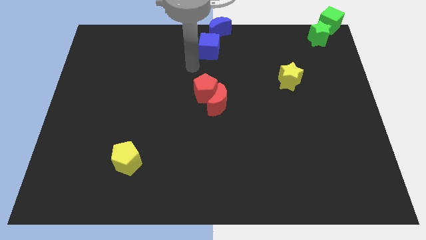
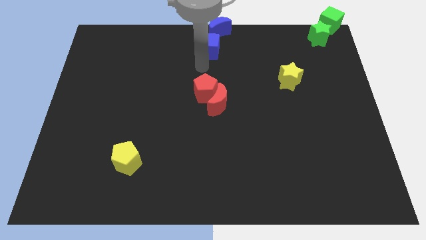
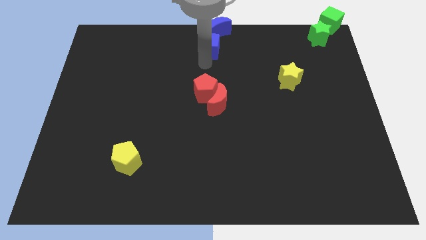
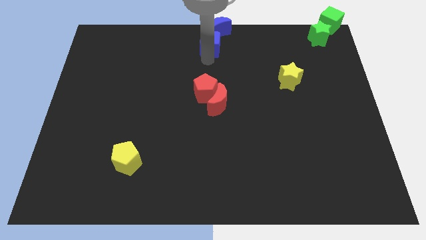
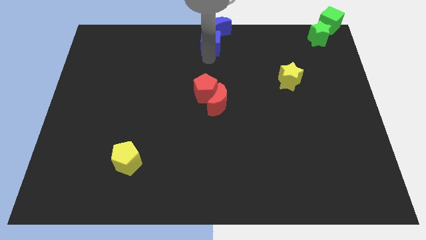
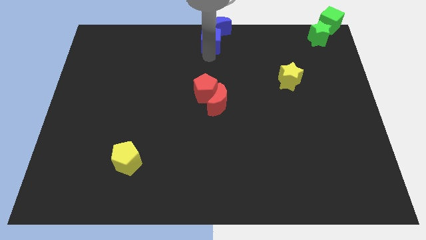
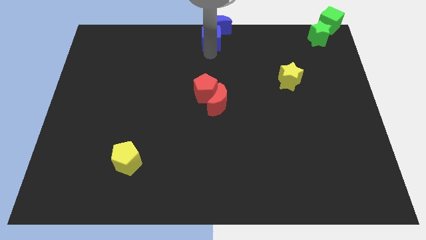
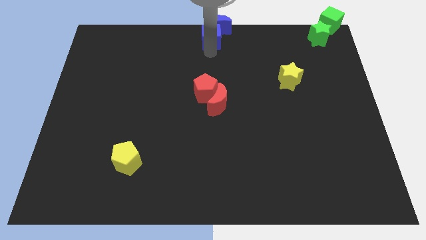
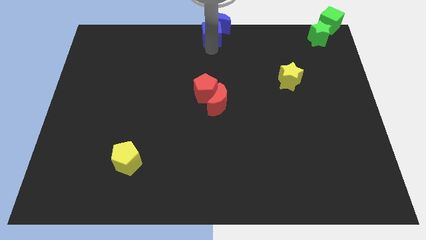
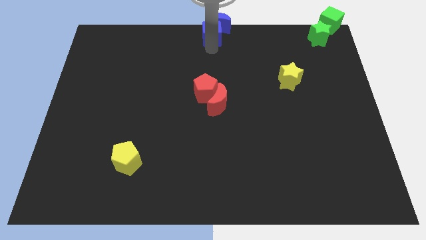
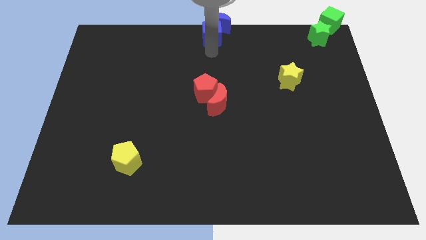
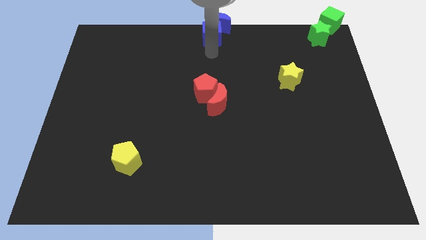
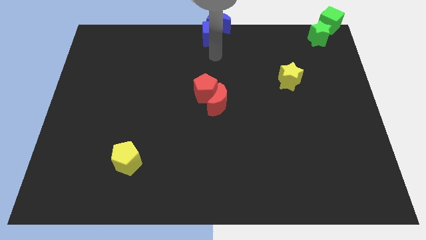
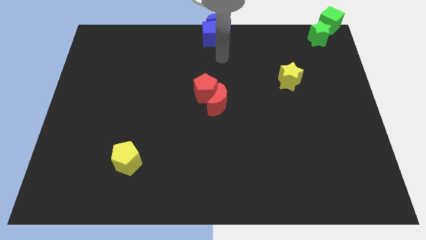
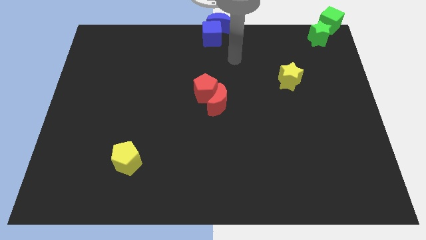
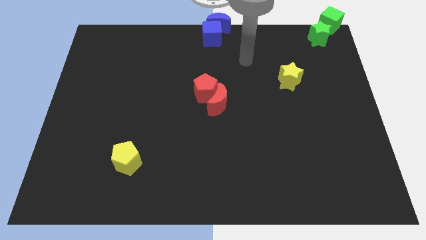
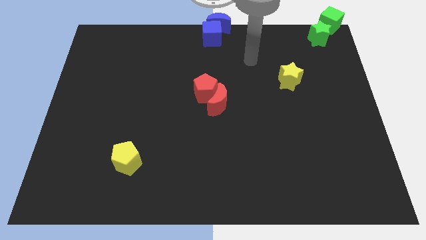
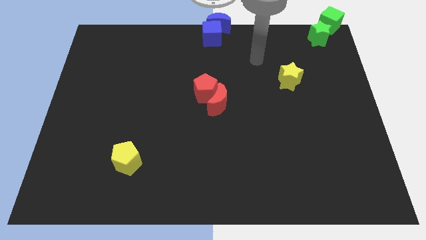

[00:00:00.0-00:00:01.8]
push the blue cube into the blue moon

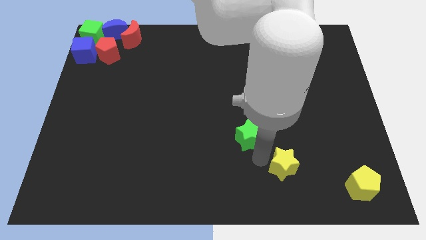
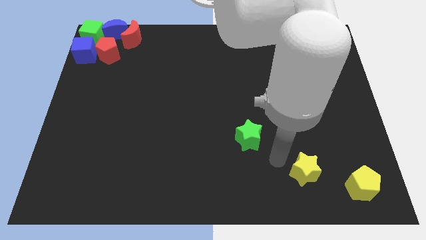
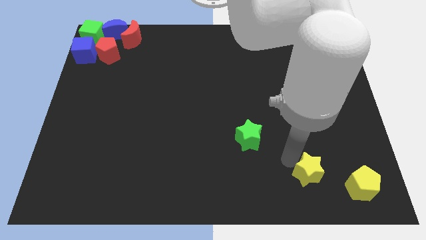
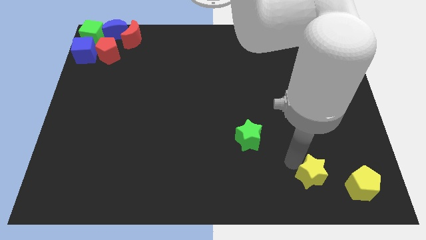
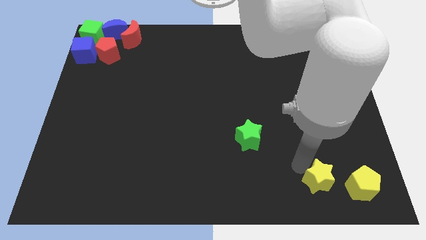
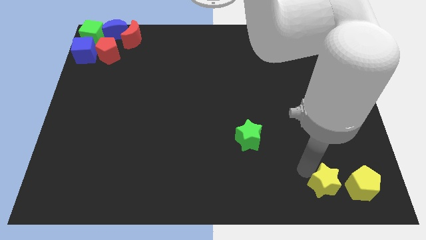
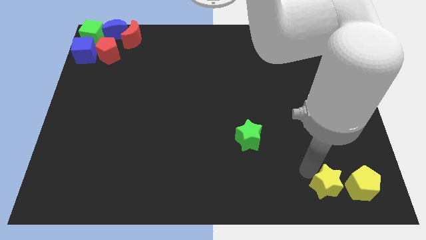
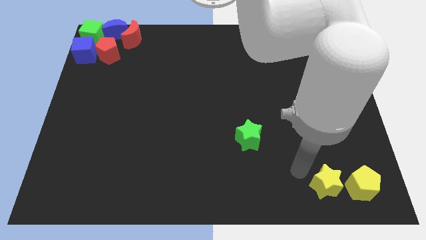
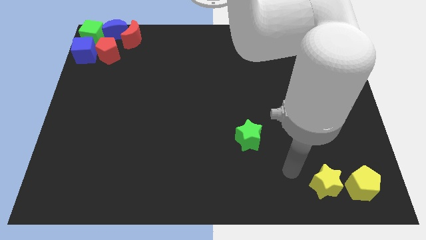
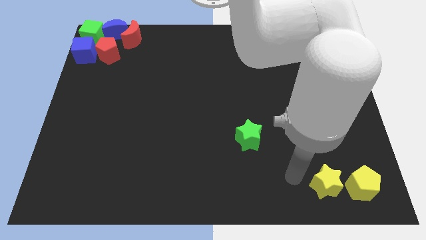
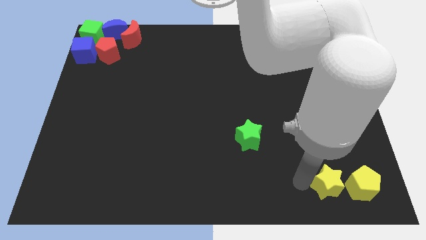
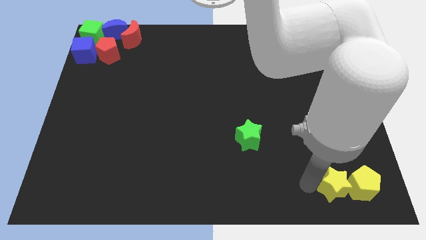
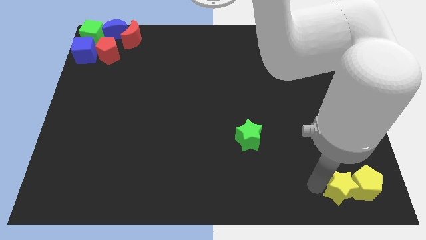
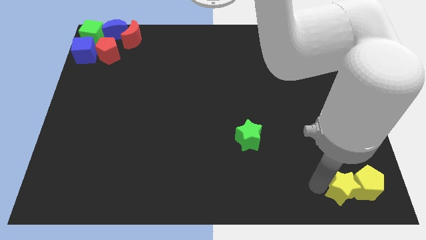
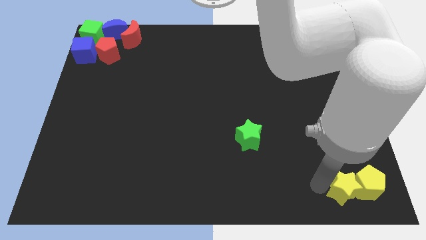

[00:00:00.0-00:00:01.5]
push the yellow star into the yellow pentagon

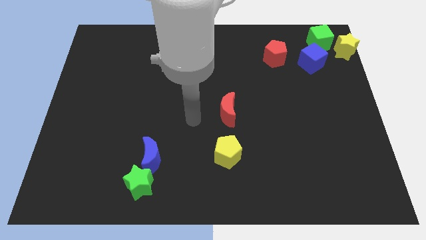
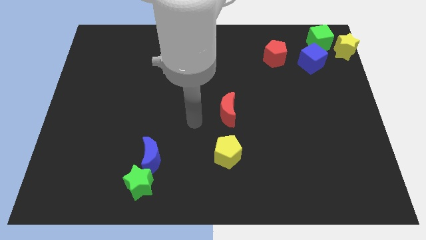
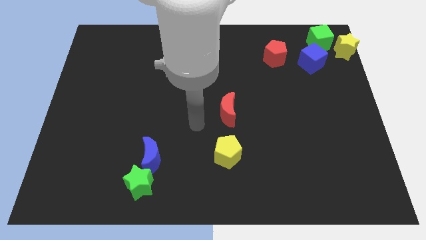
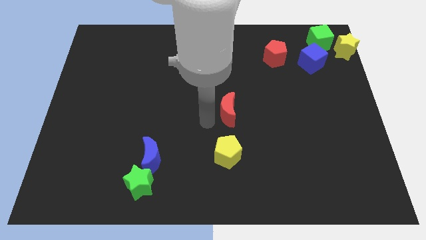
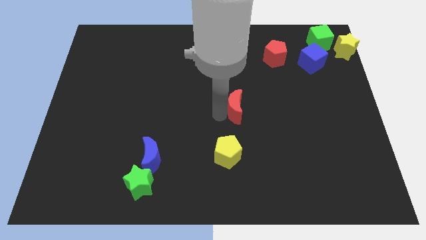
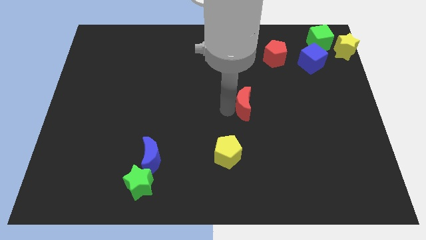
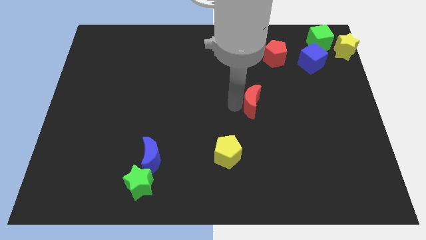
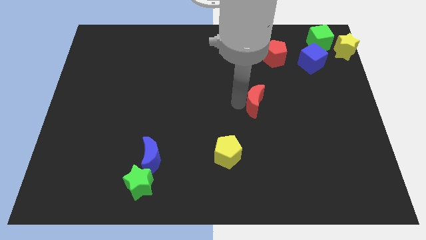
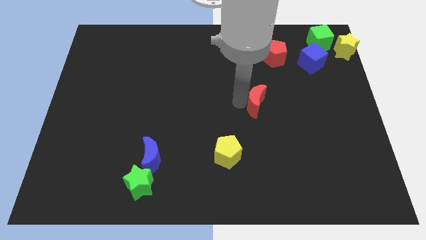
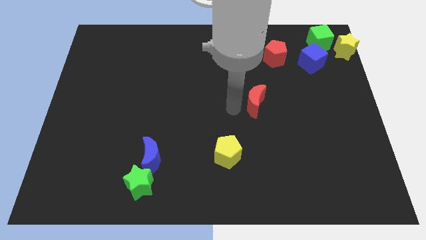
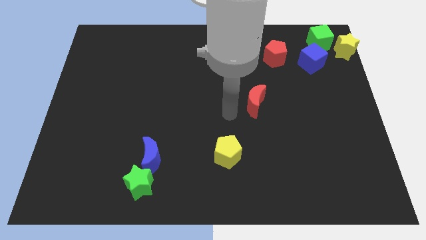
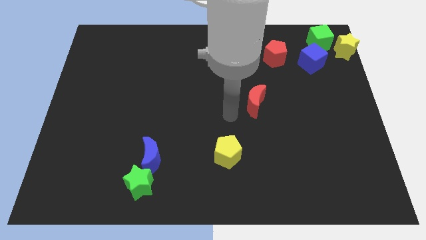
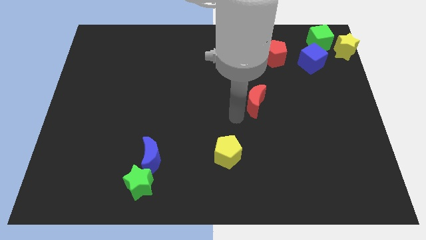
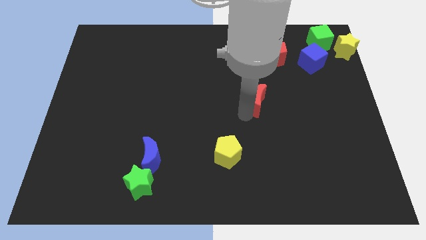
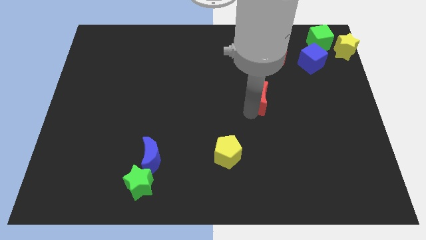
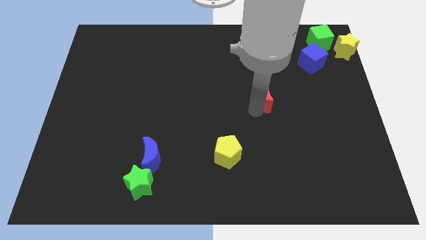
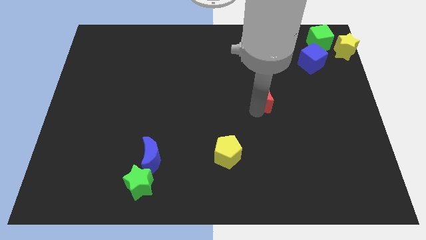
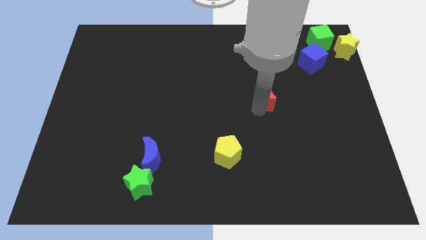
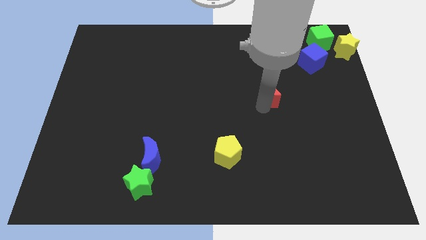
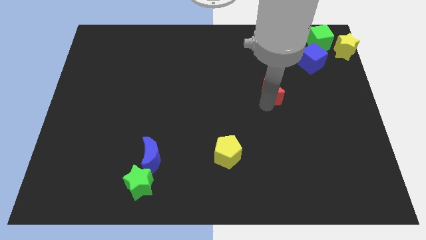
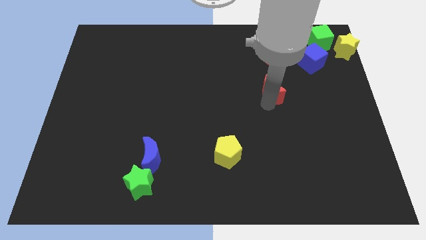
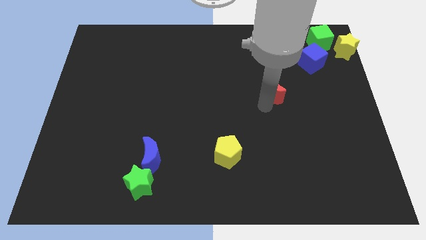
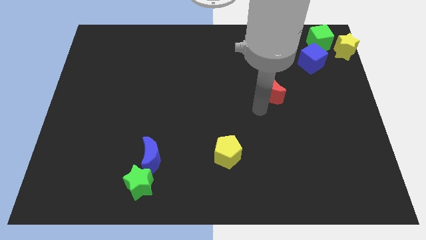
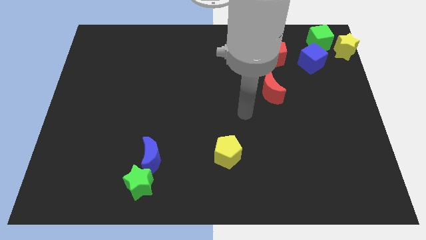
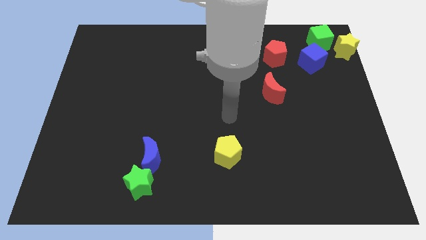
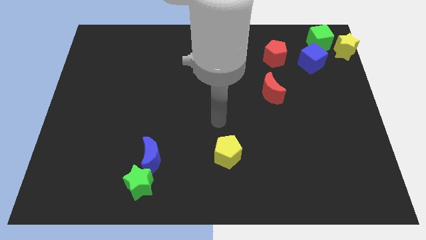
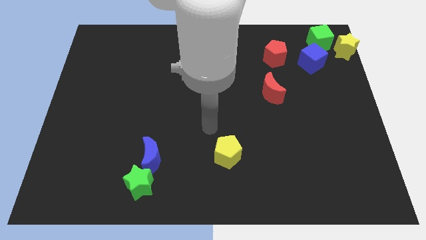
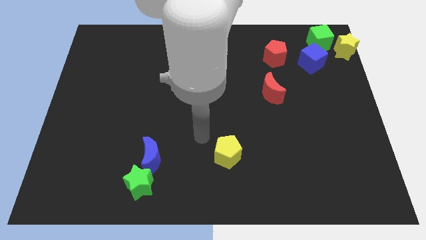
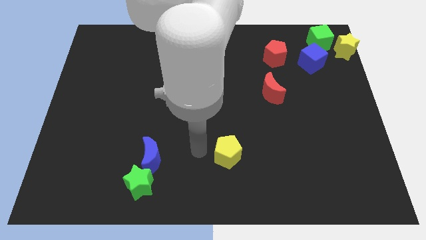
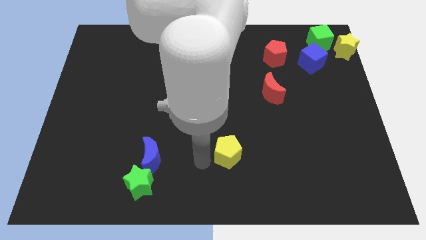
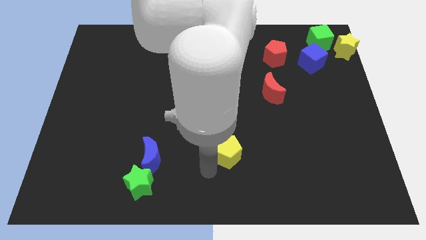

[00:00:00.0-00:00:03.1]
move the red moon diagonally to the yellow pentagon

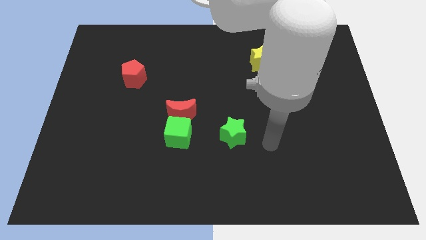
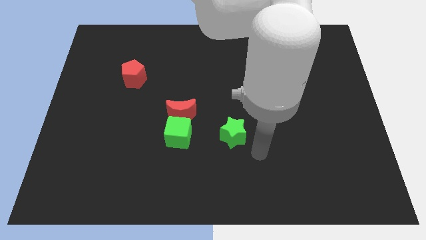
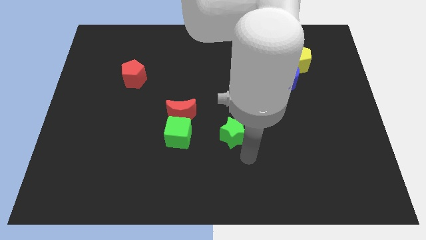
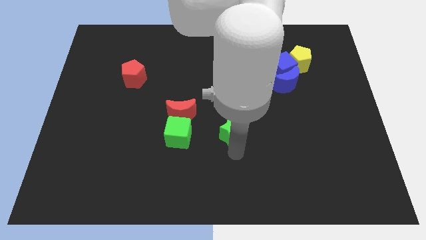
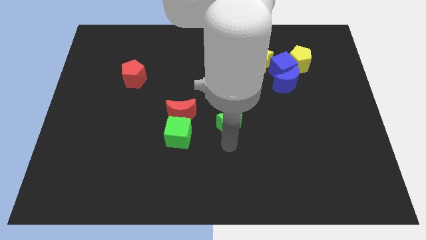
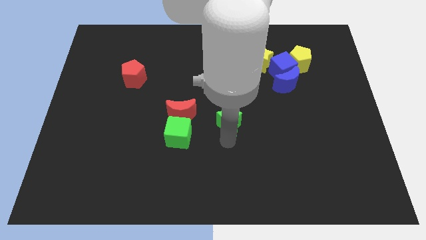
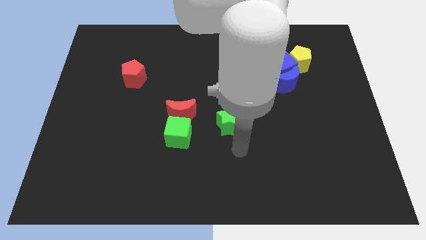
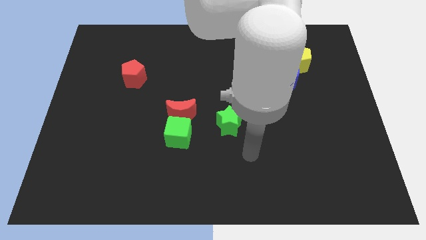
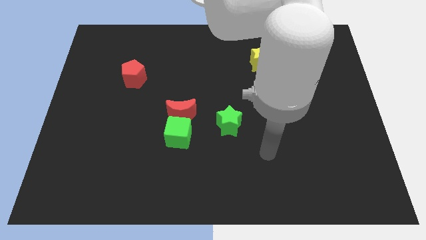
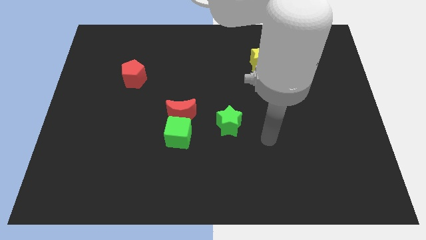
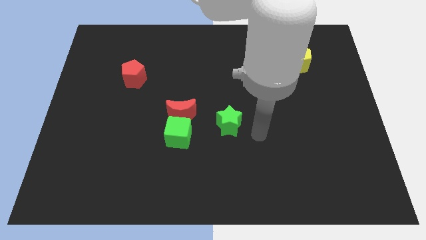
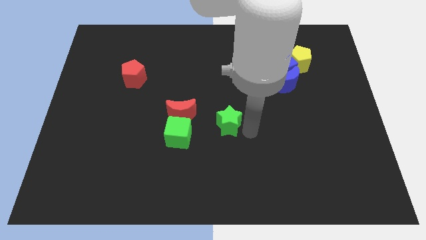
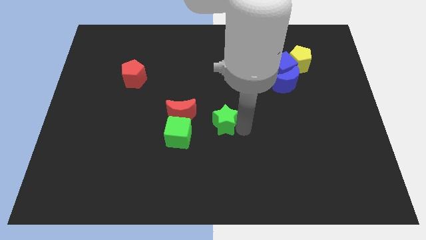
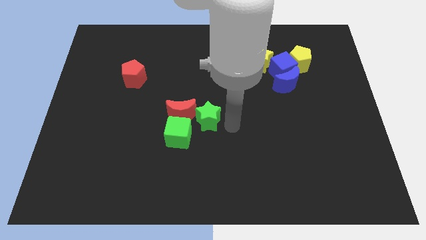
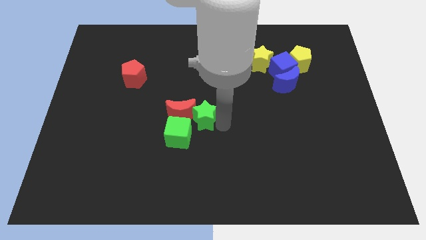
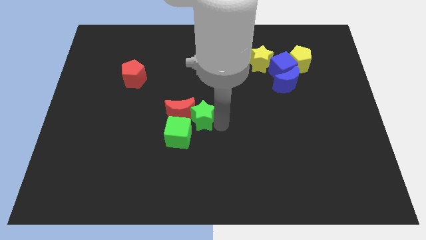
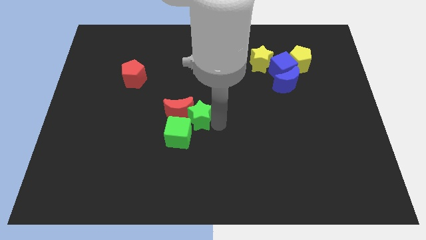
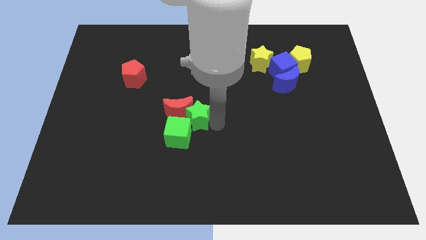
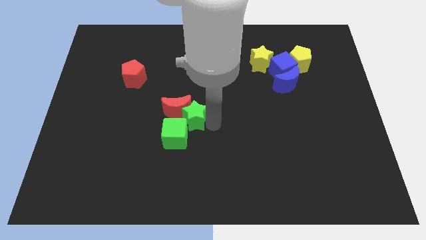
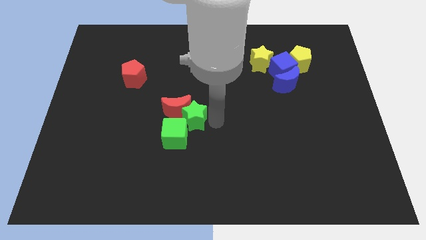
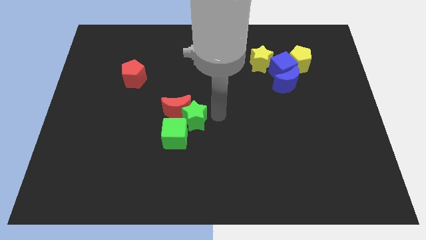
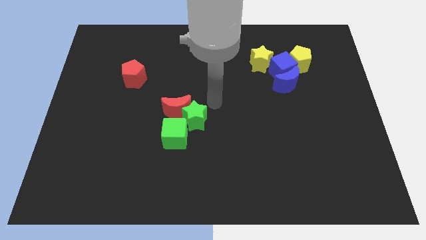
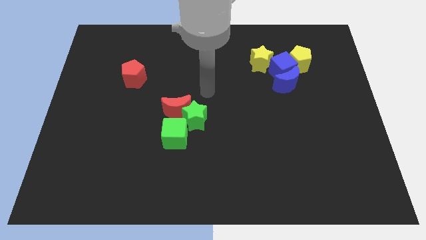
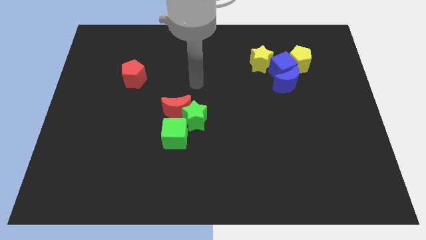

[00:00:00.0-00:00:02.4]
move the green star into the bottom right of the red moon

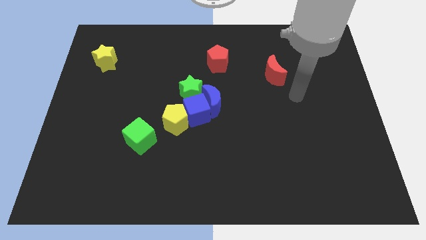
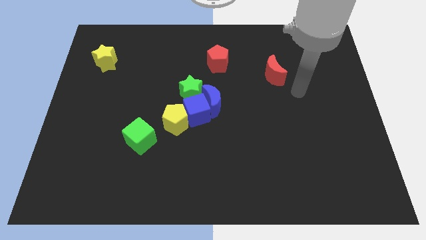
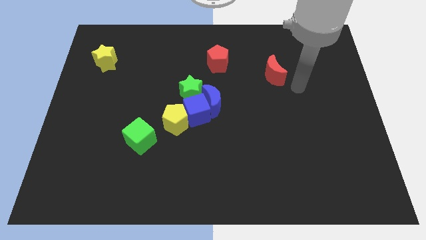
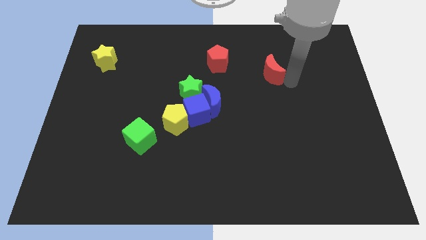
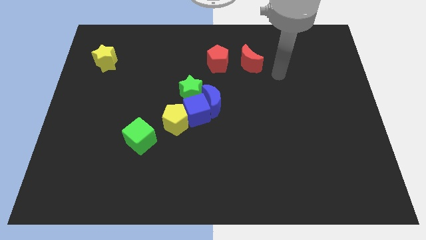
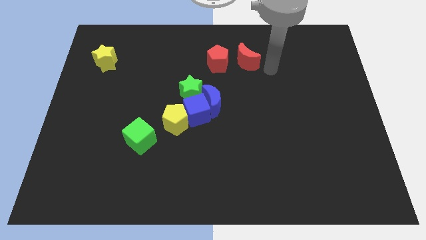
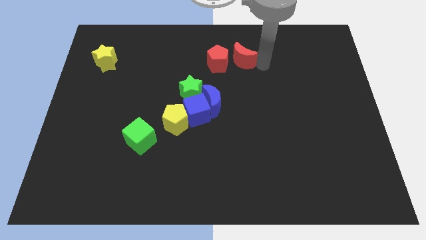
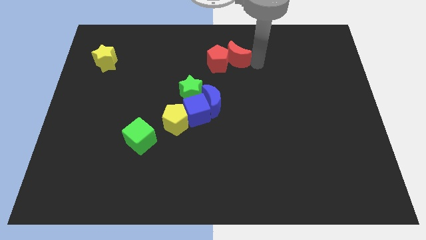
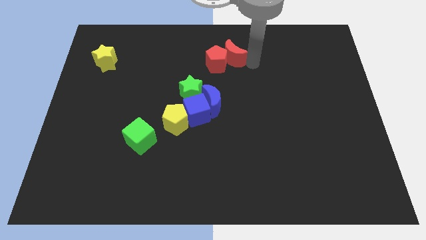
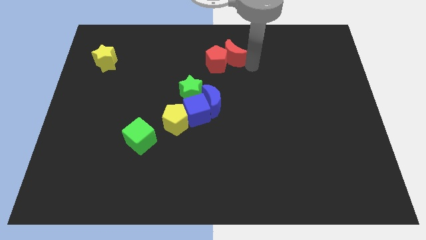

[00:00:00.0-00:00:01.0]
move the red crescent into the red pentagon
